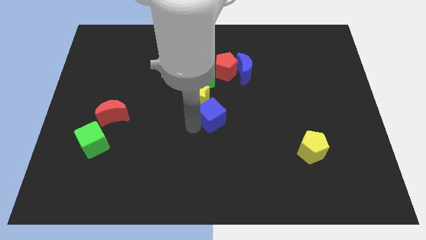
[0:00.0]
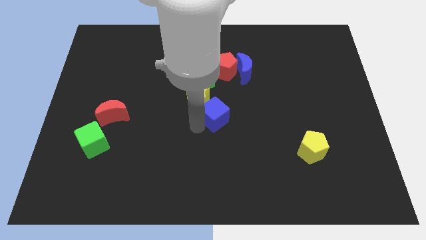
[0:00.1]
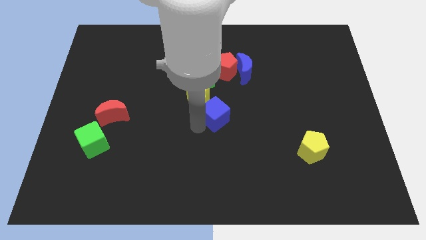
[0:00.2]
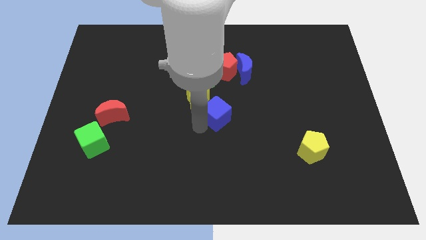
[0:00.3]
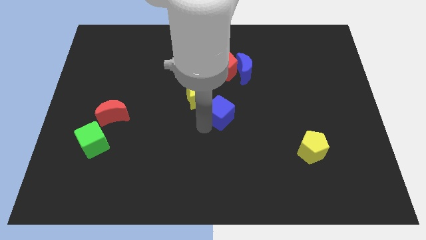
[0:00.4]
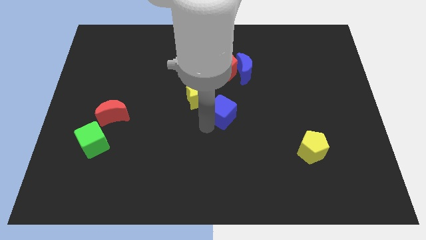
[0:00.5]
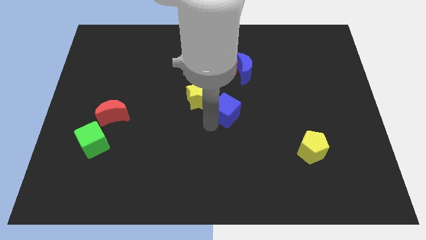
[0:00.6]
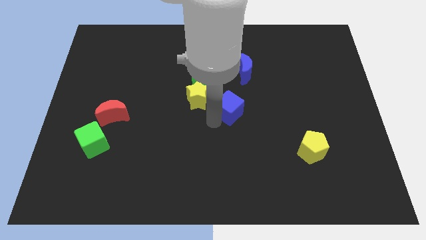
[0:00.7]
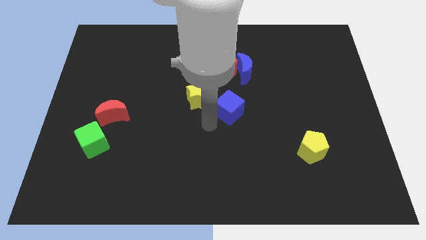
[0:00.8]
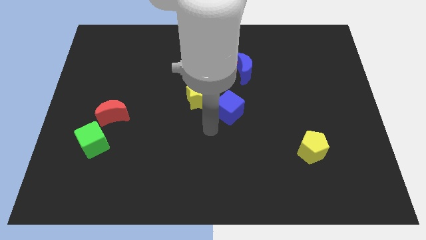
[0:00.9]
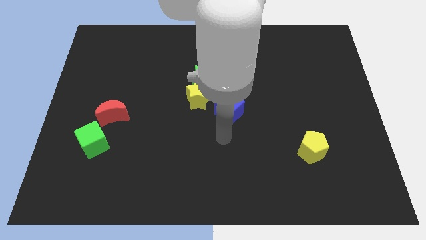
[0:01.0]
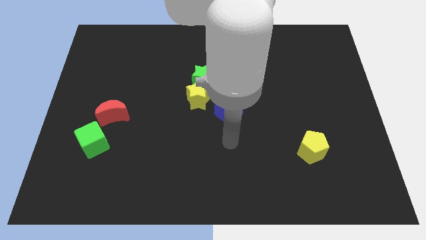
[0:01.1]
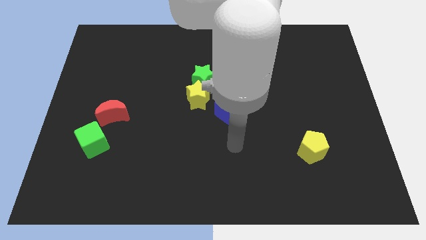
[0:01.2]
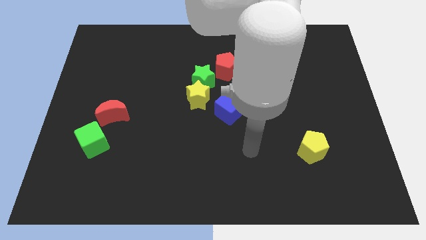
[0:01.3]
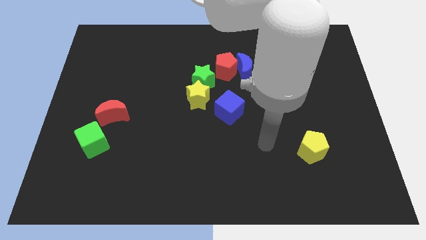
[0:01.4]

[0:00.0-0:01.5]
separate the blue moon and yellow pentagon

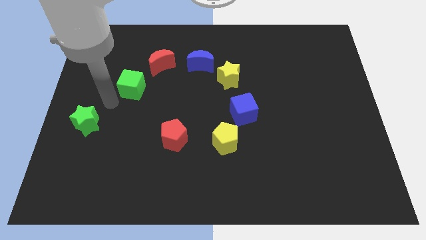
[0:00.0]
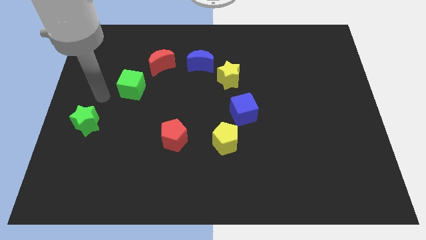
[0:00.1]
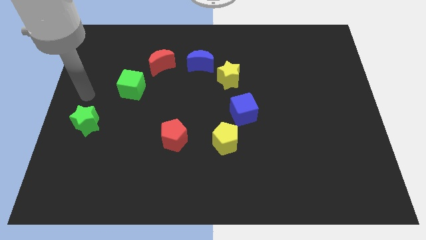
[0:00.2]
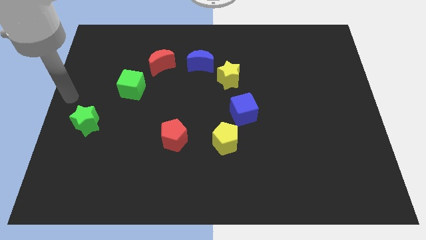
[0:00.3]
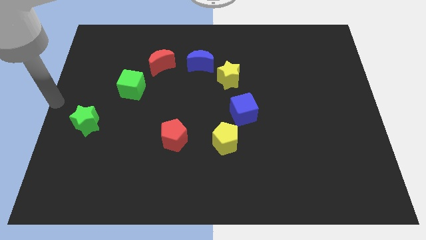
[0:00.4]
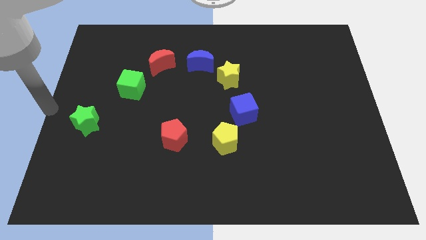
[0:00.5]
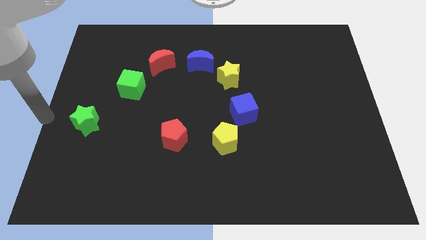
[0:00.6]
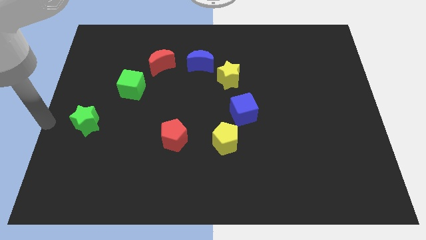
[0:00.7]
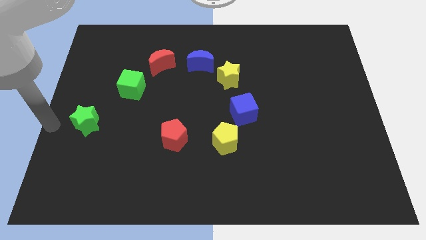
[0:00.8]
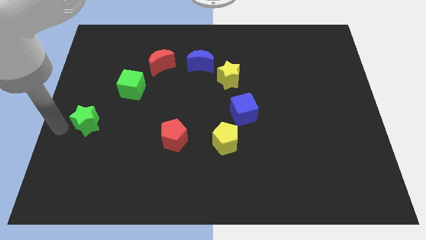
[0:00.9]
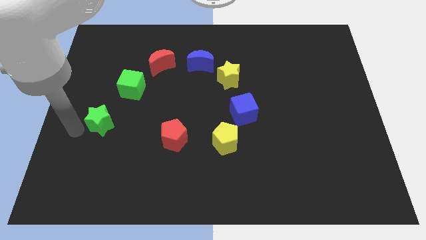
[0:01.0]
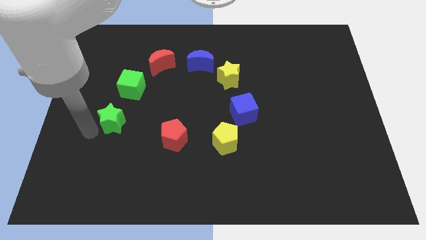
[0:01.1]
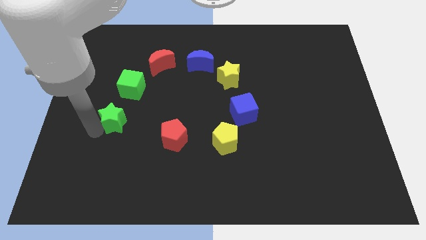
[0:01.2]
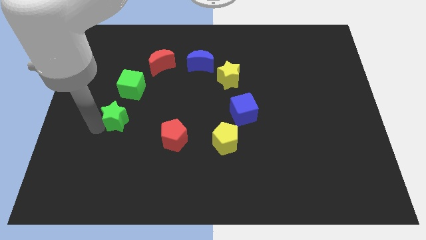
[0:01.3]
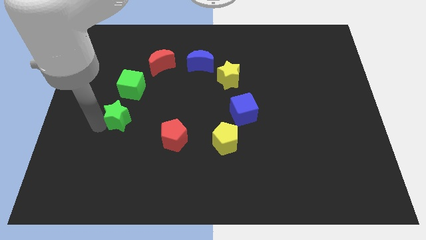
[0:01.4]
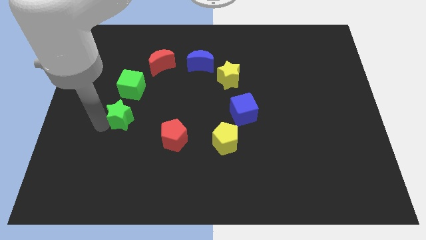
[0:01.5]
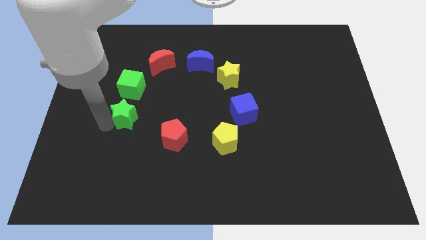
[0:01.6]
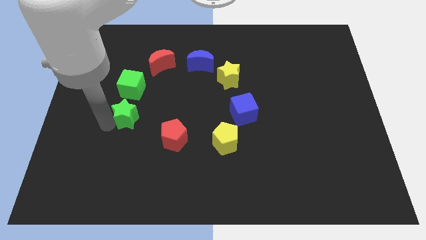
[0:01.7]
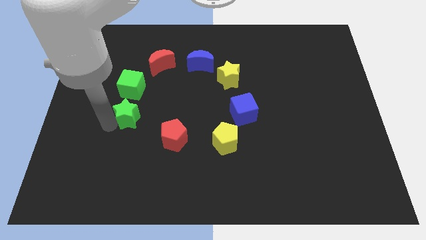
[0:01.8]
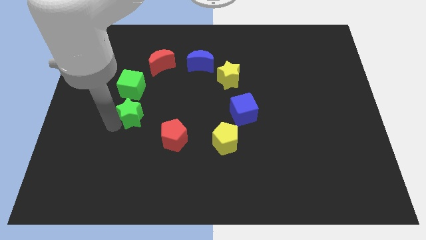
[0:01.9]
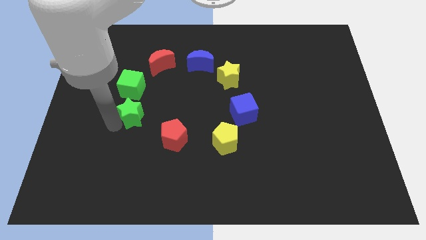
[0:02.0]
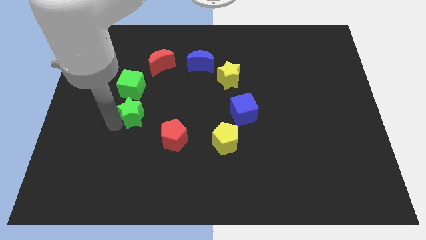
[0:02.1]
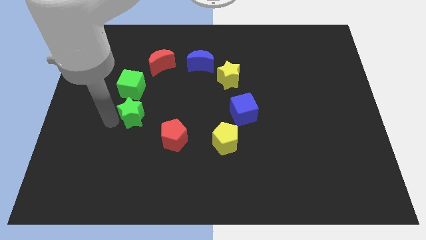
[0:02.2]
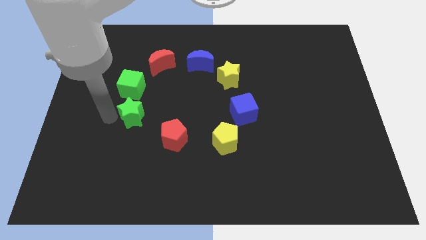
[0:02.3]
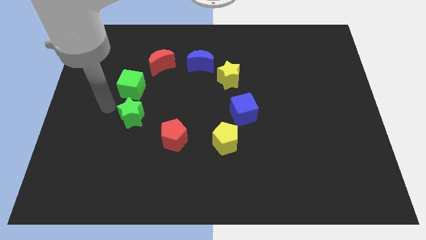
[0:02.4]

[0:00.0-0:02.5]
move green star to the bottom of the green cube

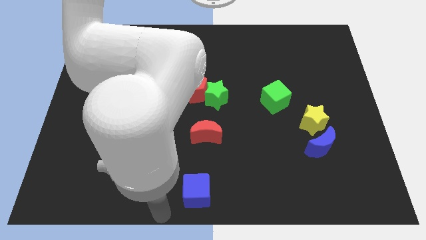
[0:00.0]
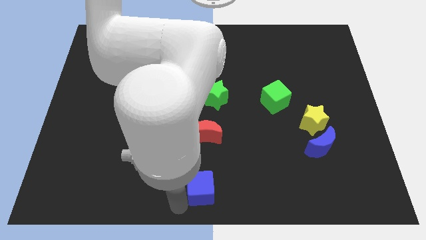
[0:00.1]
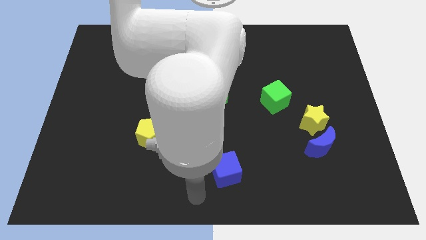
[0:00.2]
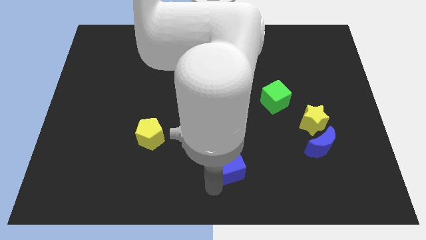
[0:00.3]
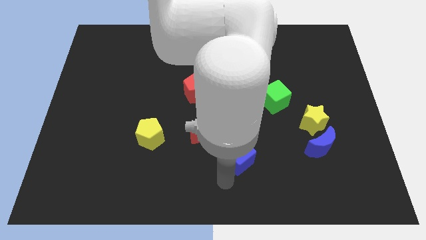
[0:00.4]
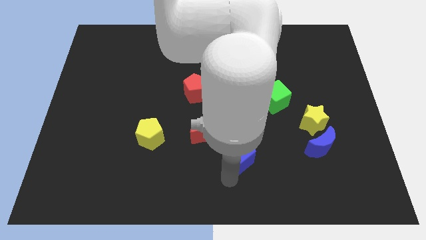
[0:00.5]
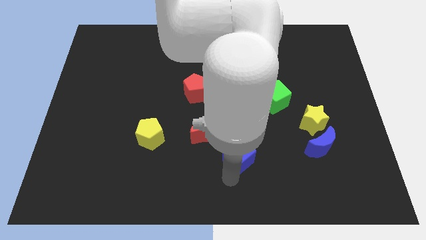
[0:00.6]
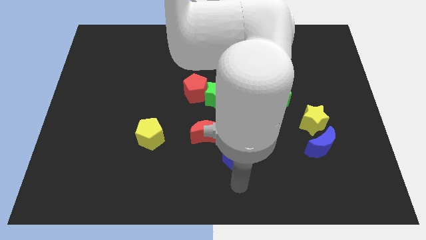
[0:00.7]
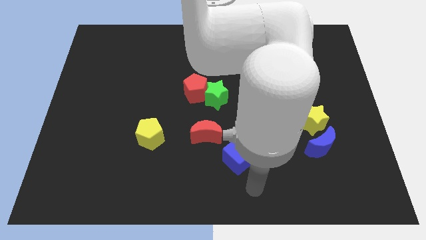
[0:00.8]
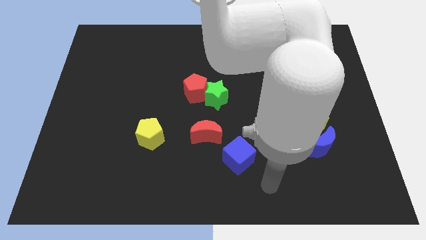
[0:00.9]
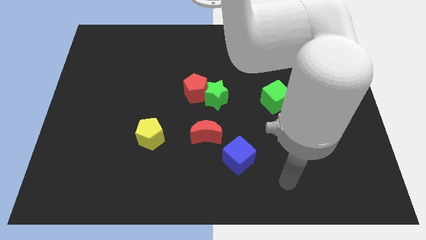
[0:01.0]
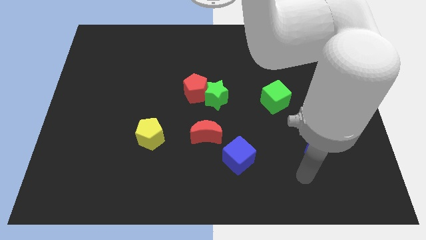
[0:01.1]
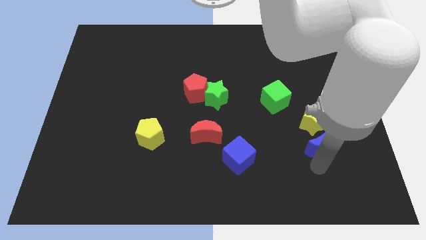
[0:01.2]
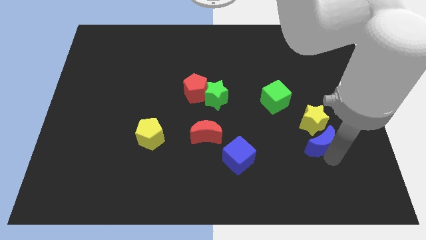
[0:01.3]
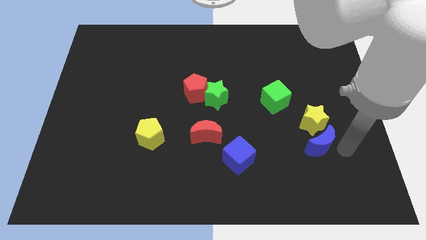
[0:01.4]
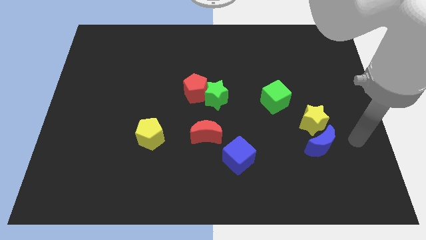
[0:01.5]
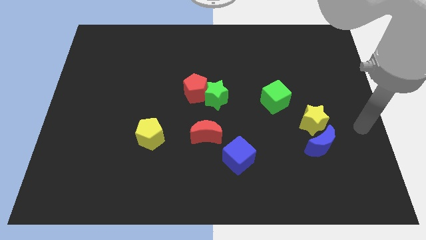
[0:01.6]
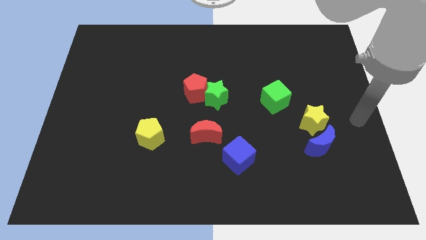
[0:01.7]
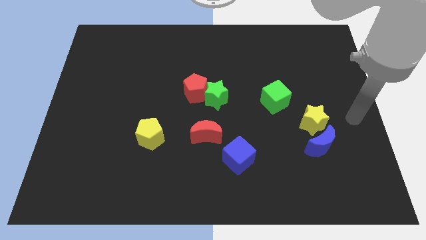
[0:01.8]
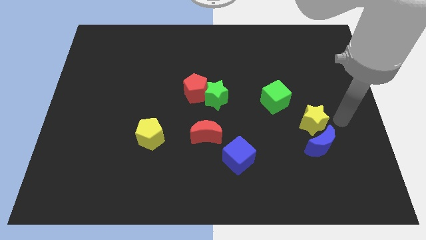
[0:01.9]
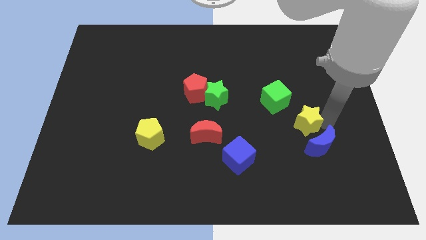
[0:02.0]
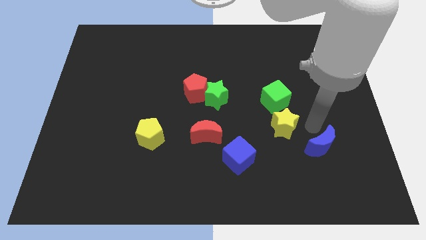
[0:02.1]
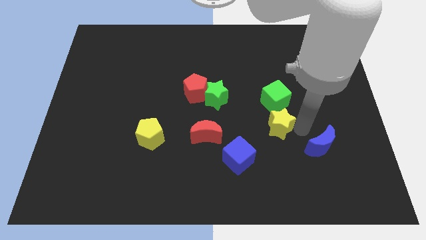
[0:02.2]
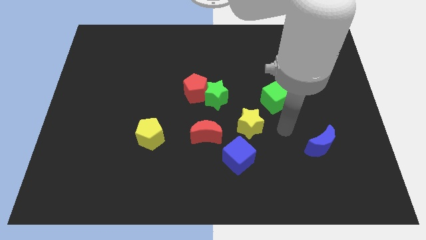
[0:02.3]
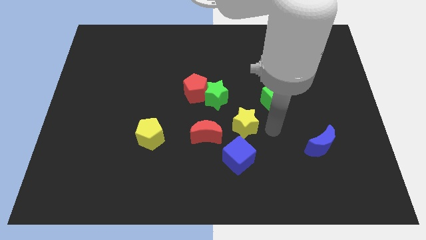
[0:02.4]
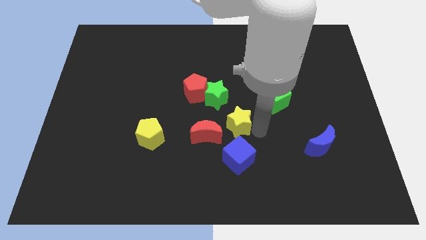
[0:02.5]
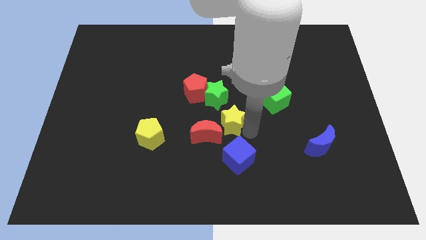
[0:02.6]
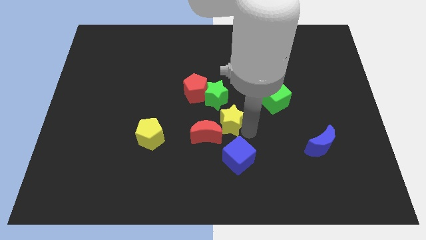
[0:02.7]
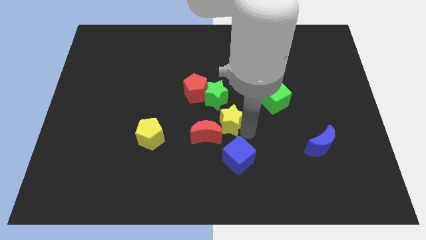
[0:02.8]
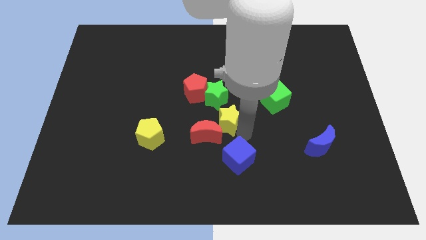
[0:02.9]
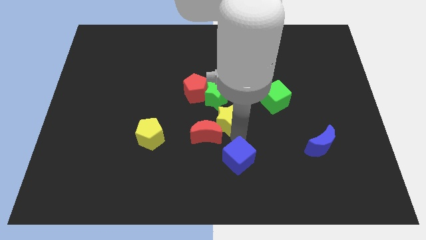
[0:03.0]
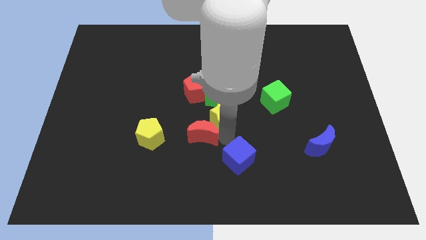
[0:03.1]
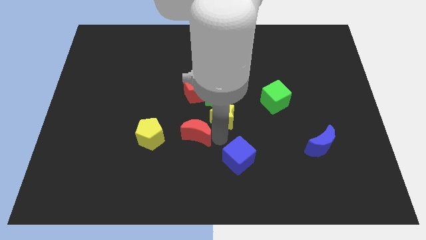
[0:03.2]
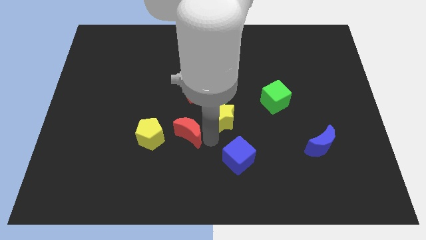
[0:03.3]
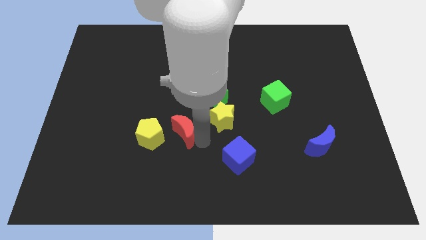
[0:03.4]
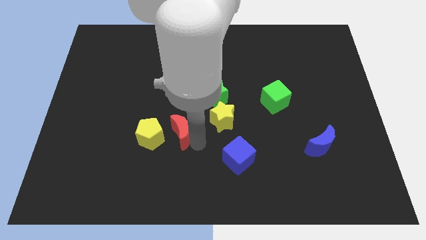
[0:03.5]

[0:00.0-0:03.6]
move the yellow star diagonally top left to the blue cube

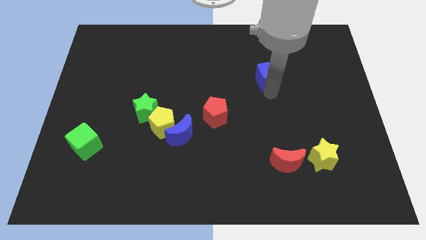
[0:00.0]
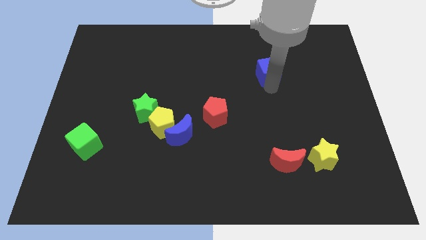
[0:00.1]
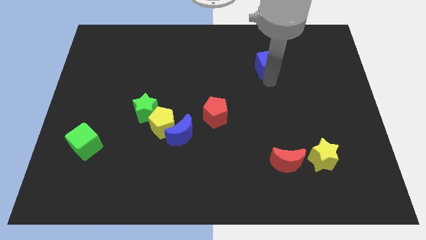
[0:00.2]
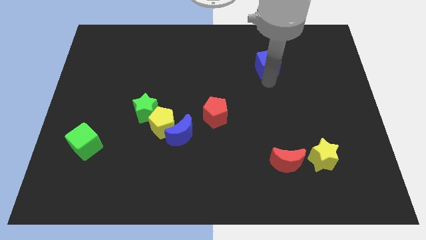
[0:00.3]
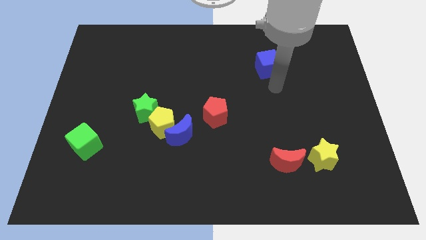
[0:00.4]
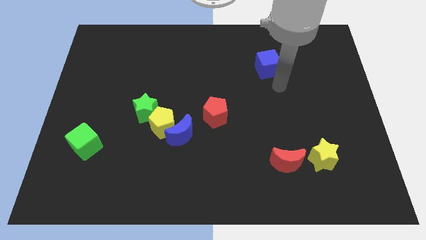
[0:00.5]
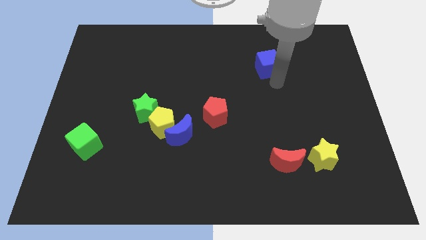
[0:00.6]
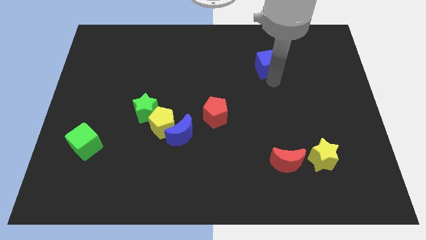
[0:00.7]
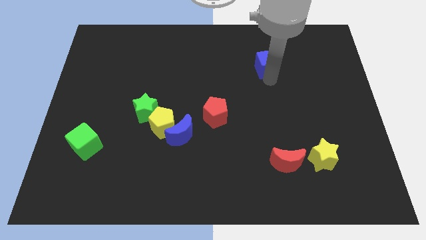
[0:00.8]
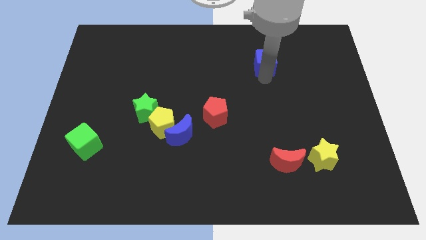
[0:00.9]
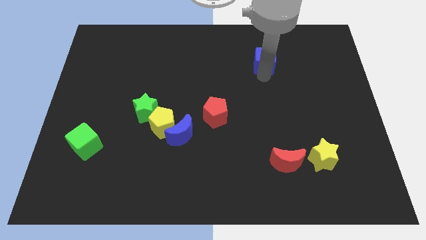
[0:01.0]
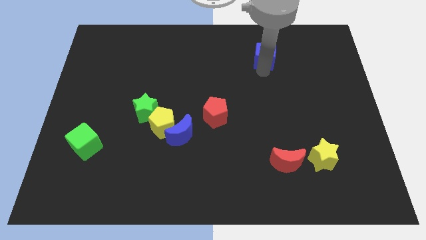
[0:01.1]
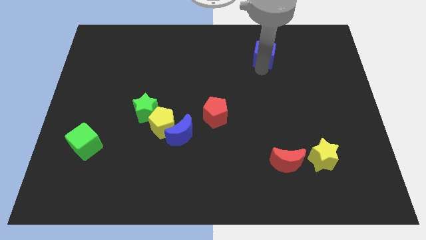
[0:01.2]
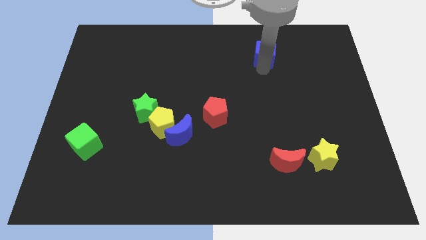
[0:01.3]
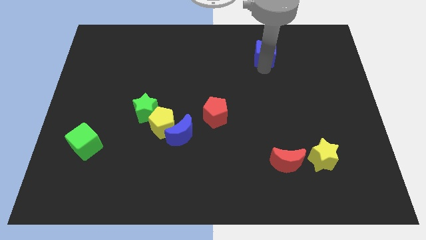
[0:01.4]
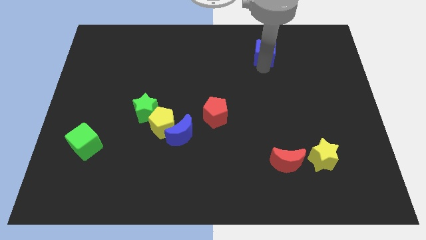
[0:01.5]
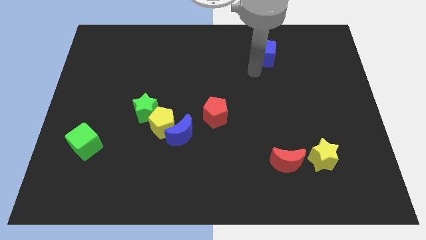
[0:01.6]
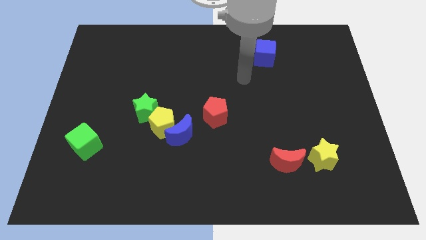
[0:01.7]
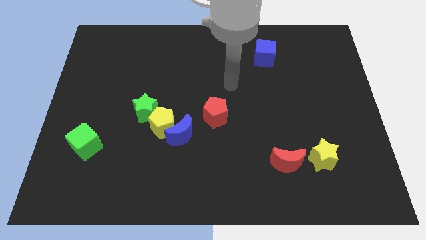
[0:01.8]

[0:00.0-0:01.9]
move blue cube towards the top center of the board
